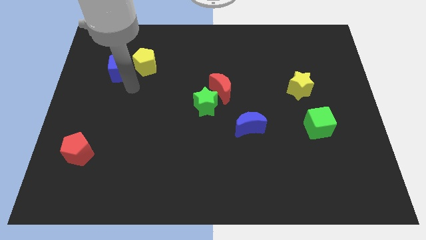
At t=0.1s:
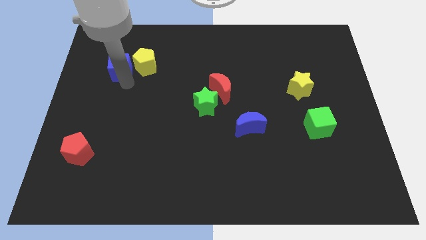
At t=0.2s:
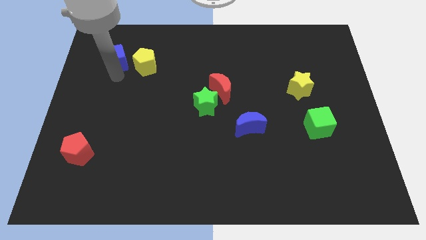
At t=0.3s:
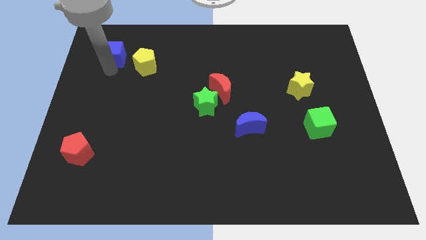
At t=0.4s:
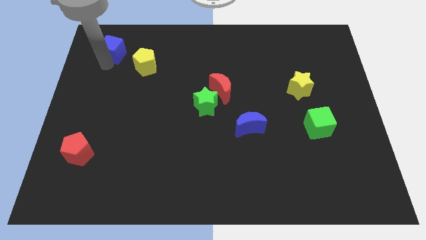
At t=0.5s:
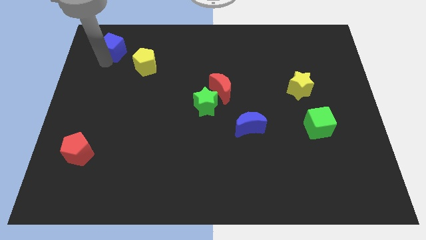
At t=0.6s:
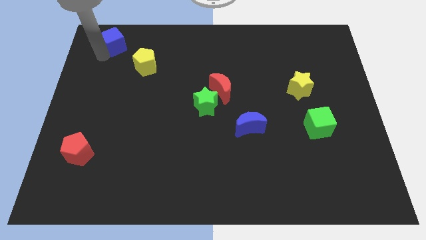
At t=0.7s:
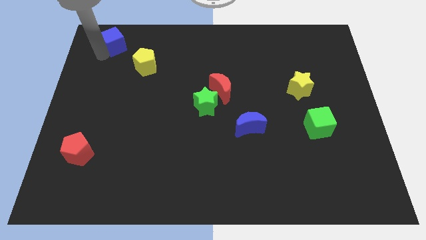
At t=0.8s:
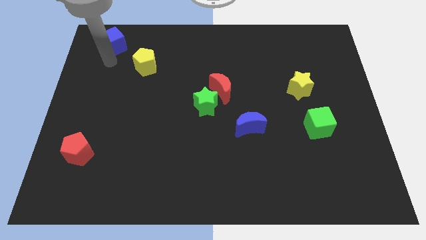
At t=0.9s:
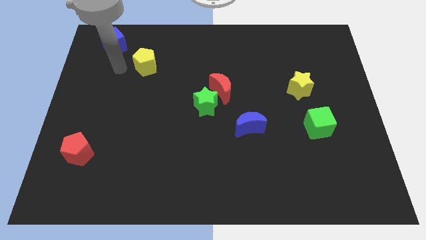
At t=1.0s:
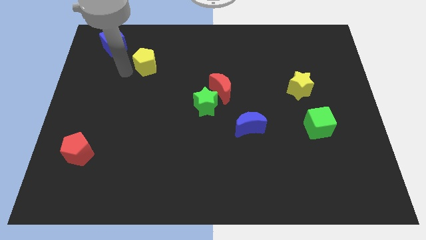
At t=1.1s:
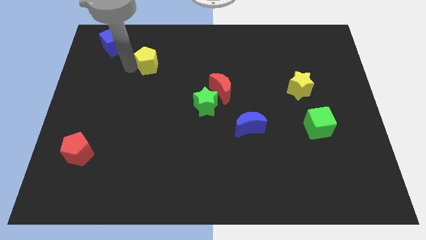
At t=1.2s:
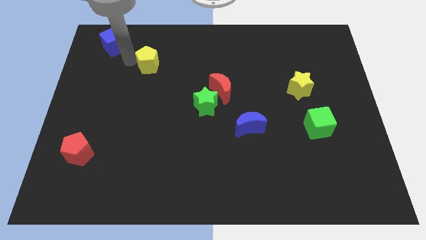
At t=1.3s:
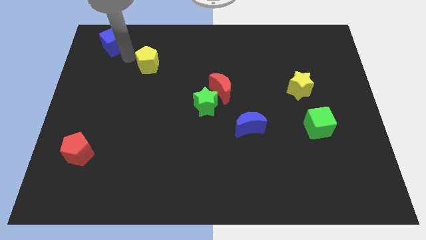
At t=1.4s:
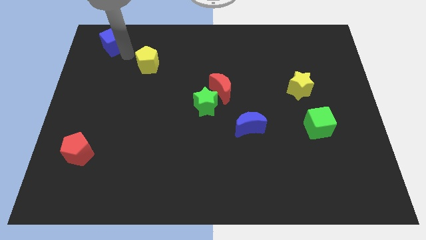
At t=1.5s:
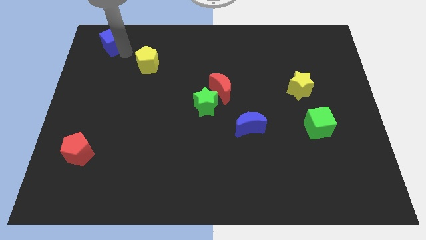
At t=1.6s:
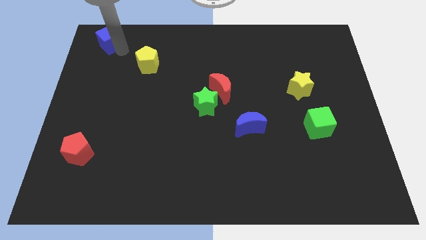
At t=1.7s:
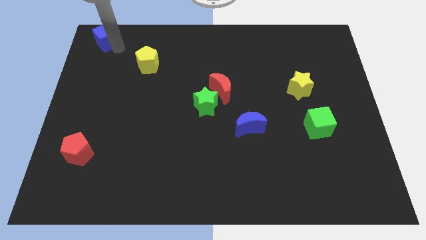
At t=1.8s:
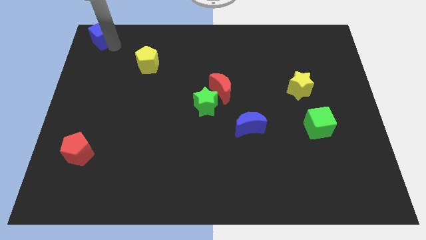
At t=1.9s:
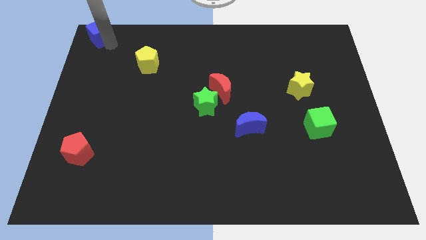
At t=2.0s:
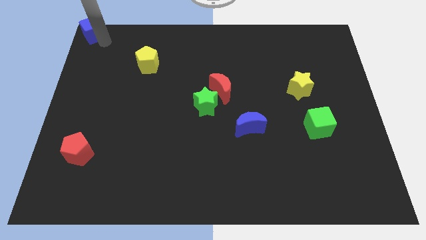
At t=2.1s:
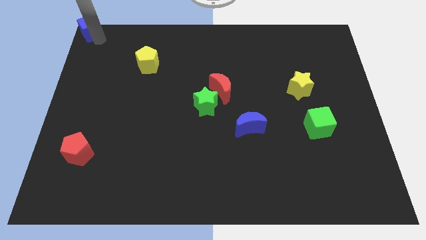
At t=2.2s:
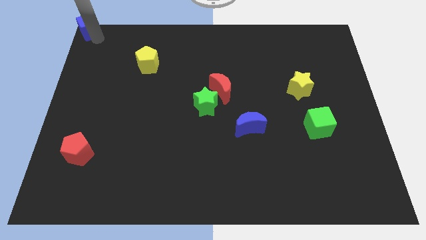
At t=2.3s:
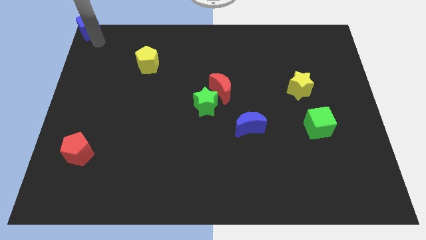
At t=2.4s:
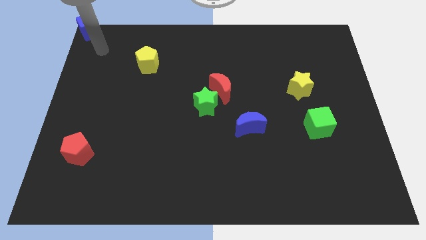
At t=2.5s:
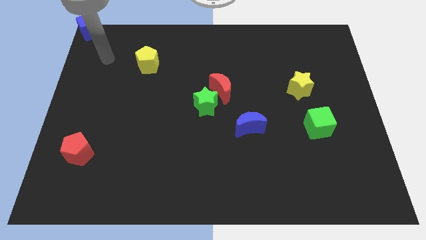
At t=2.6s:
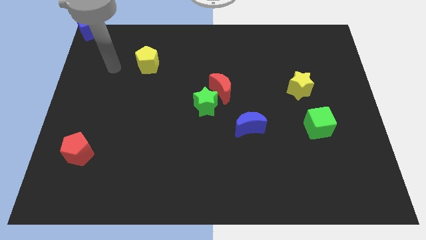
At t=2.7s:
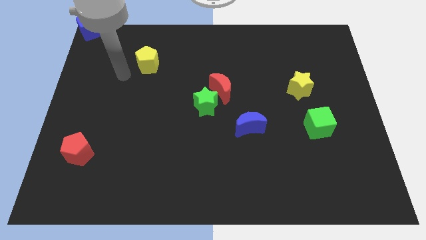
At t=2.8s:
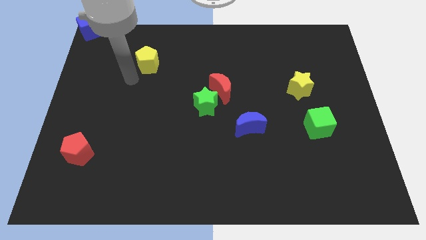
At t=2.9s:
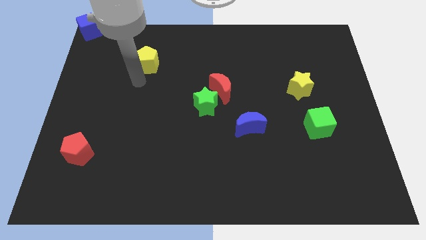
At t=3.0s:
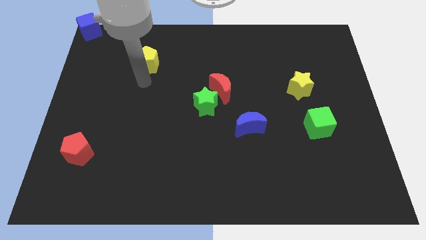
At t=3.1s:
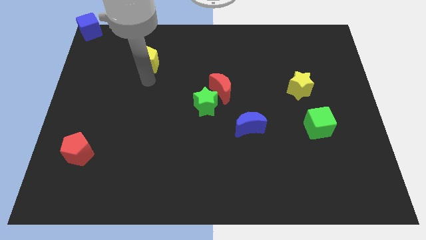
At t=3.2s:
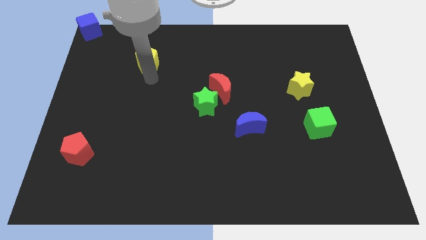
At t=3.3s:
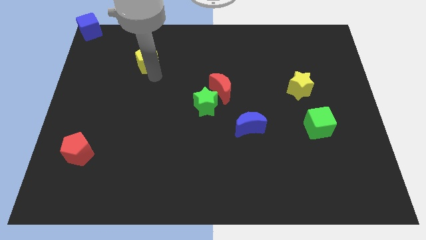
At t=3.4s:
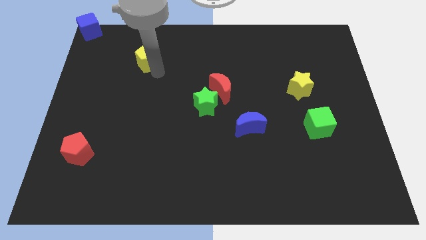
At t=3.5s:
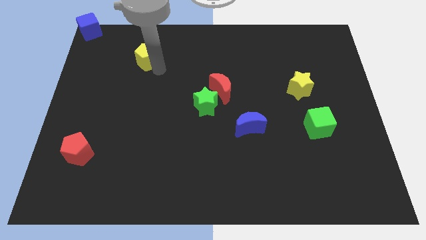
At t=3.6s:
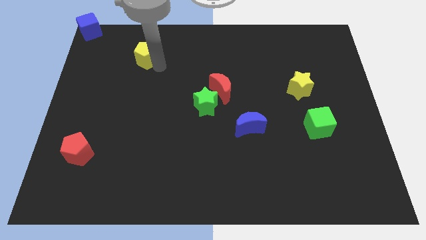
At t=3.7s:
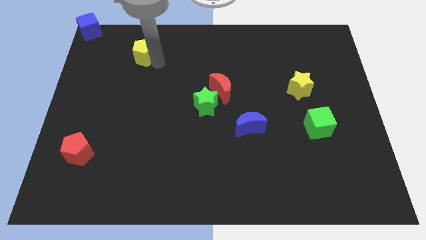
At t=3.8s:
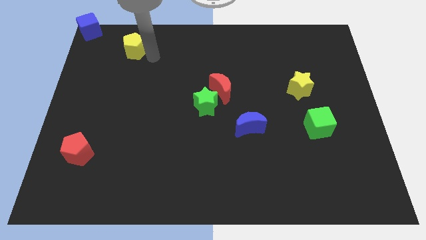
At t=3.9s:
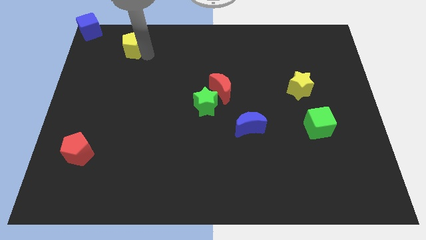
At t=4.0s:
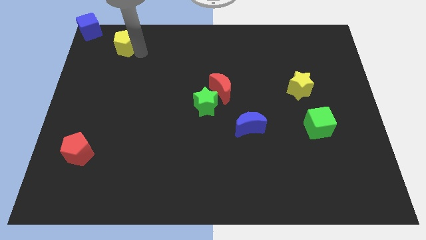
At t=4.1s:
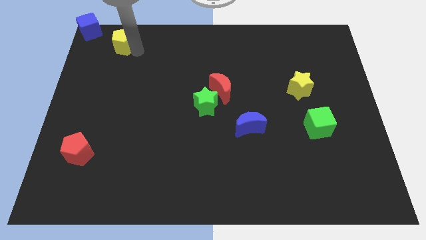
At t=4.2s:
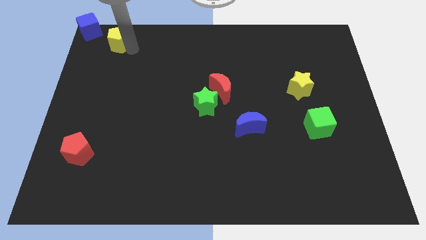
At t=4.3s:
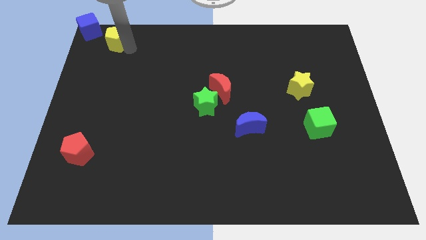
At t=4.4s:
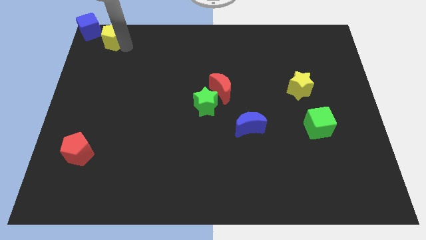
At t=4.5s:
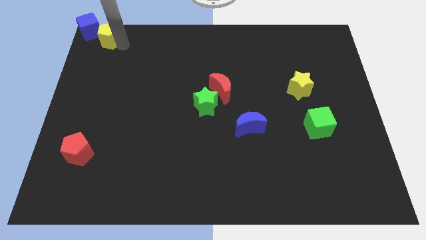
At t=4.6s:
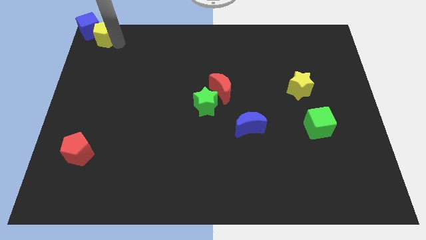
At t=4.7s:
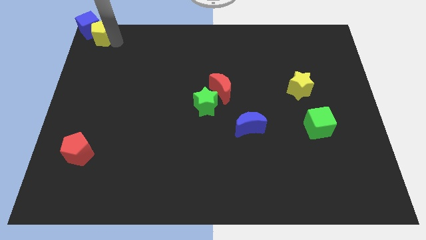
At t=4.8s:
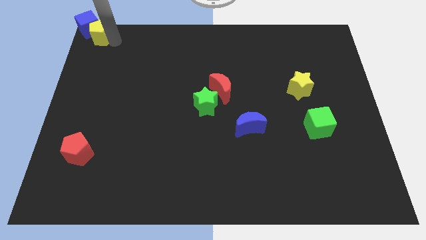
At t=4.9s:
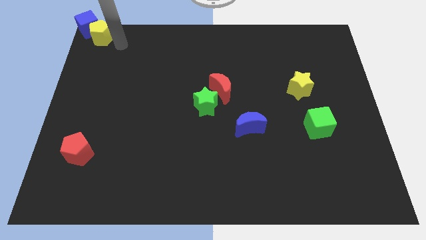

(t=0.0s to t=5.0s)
push the blue cube and yellow pentagon at the top left corner of the board

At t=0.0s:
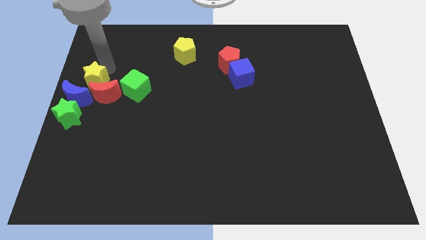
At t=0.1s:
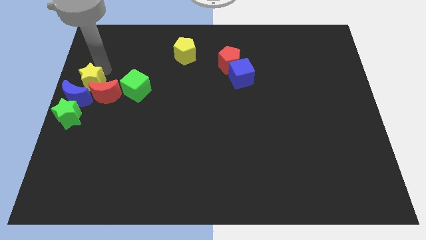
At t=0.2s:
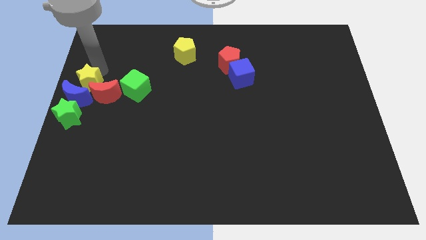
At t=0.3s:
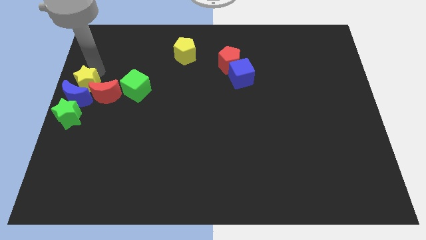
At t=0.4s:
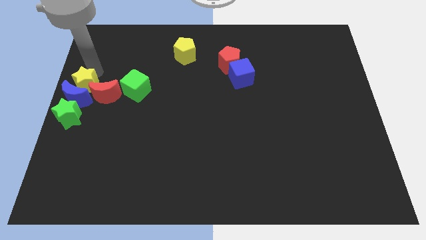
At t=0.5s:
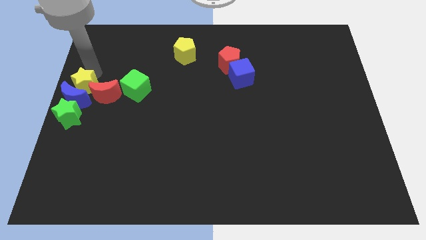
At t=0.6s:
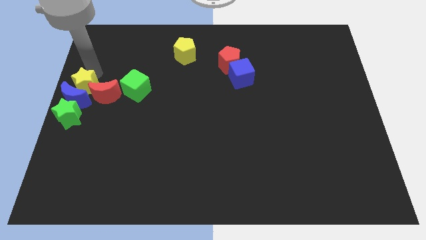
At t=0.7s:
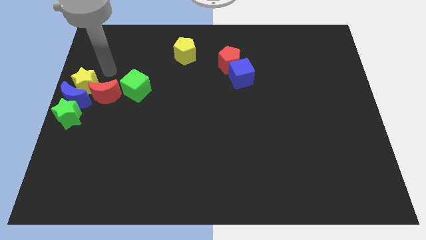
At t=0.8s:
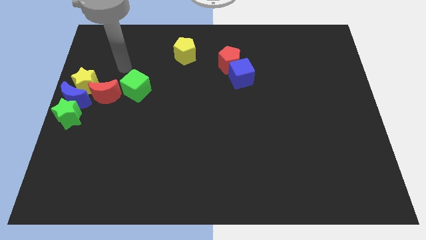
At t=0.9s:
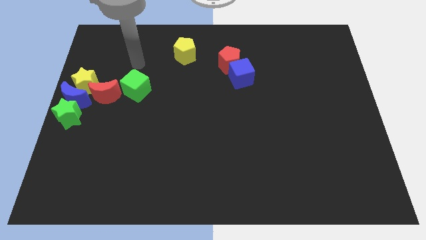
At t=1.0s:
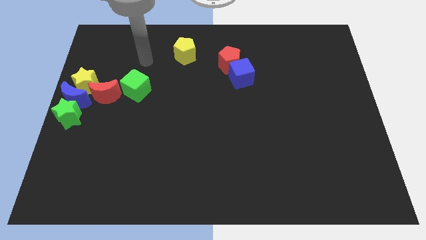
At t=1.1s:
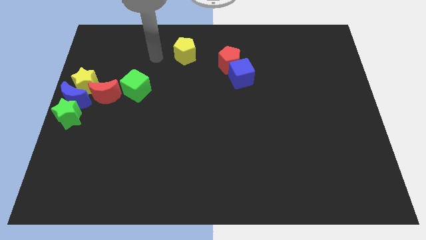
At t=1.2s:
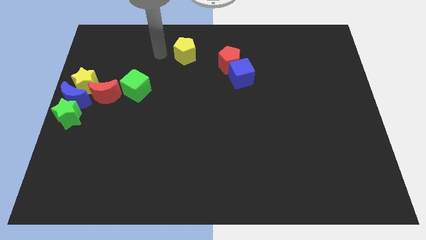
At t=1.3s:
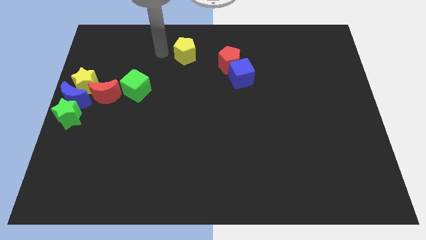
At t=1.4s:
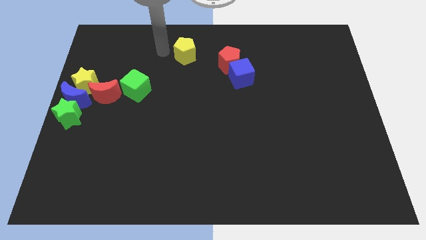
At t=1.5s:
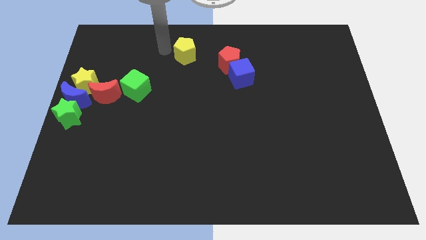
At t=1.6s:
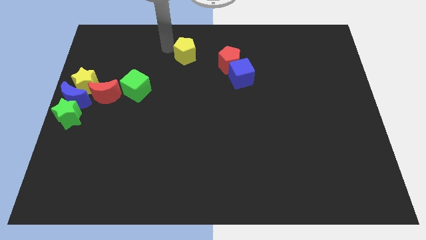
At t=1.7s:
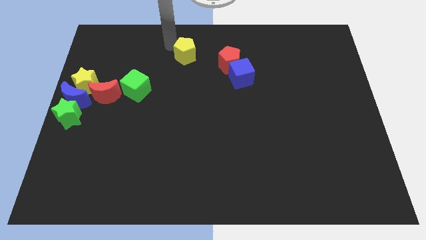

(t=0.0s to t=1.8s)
move the yellow star into the blue moon

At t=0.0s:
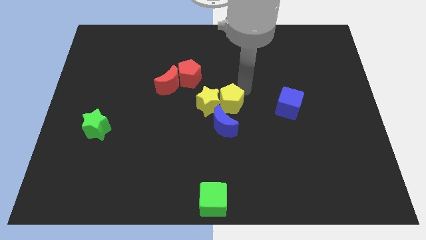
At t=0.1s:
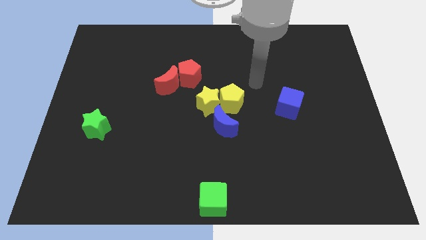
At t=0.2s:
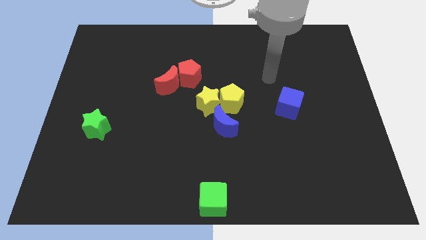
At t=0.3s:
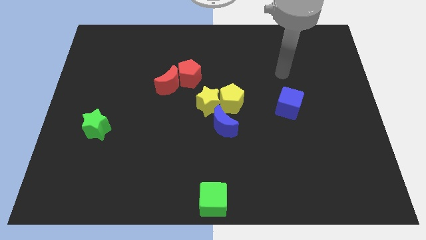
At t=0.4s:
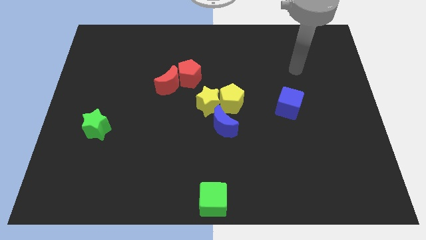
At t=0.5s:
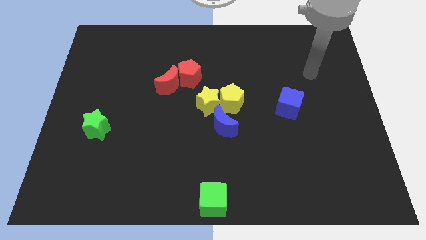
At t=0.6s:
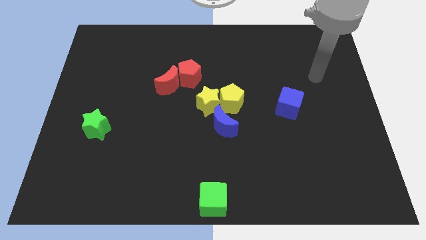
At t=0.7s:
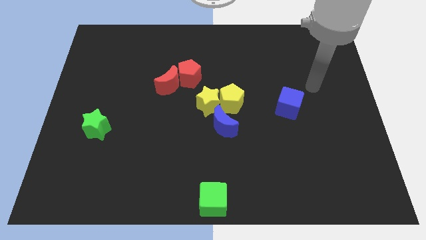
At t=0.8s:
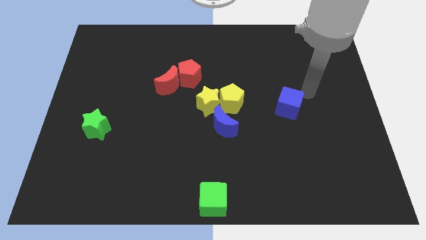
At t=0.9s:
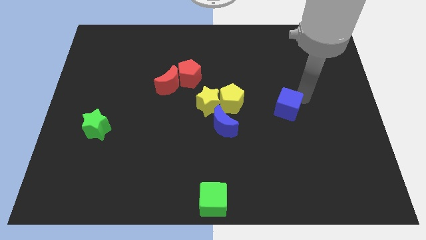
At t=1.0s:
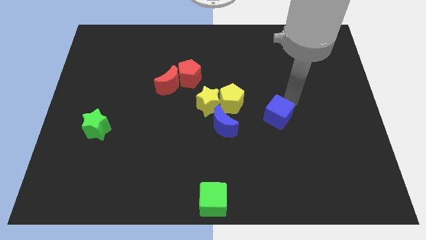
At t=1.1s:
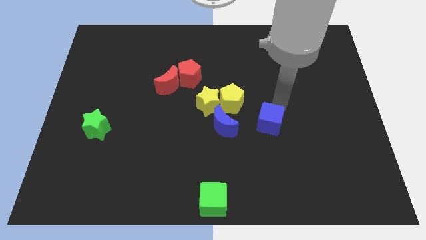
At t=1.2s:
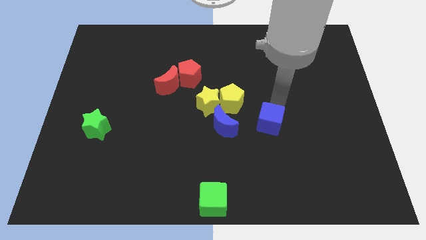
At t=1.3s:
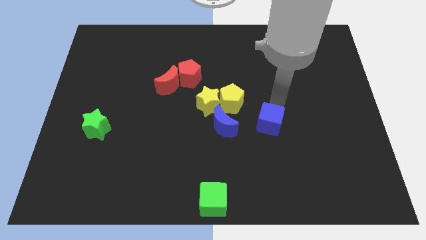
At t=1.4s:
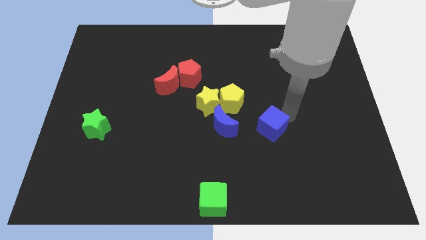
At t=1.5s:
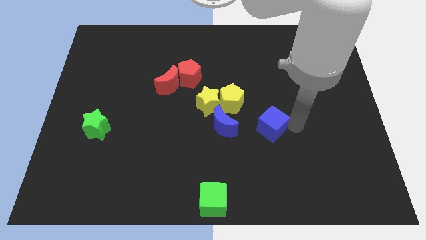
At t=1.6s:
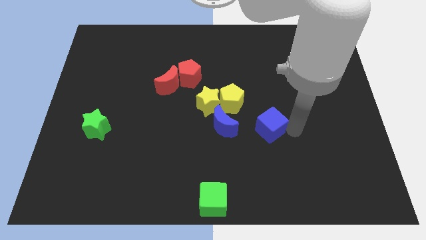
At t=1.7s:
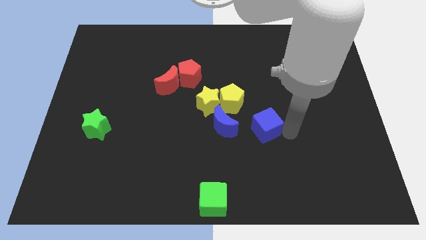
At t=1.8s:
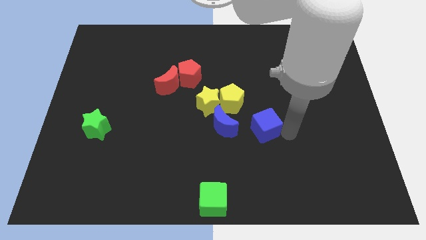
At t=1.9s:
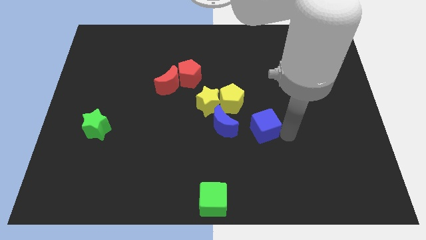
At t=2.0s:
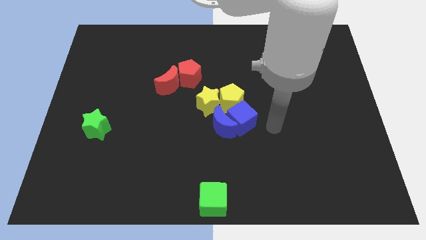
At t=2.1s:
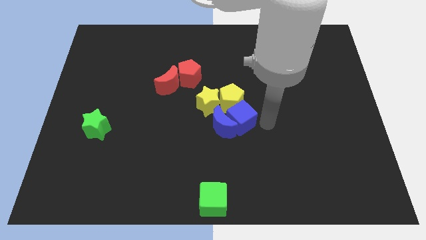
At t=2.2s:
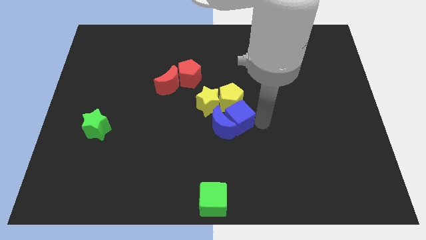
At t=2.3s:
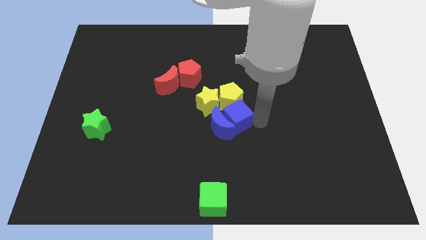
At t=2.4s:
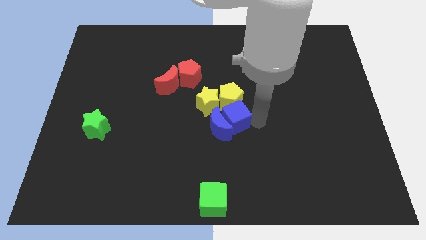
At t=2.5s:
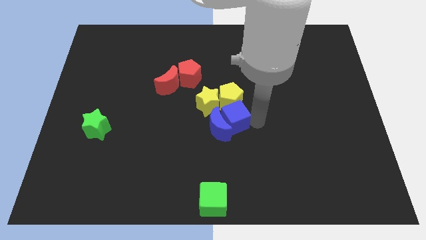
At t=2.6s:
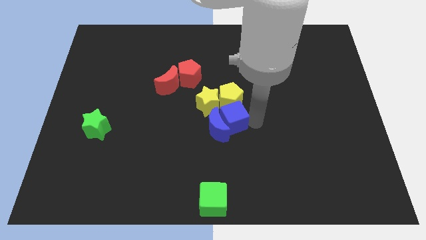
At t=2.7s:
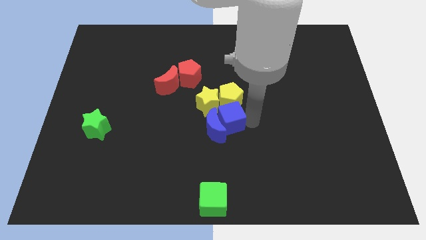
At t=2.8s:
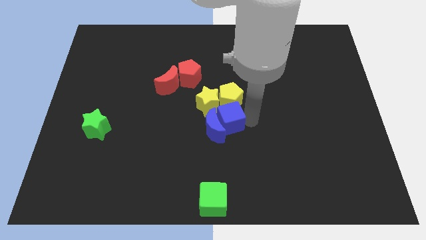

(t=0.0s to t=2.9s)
push the blue cube into blue crescent
